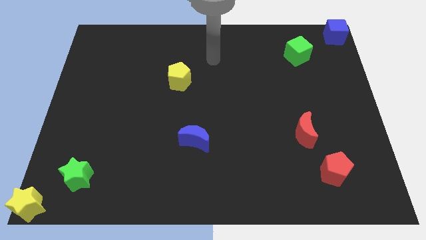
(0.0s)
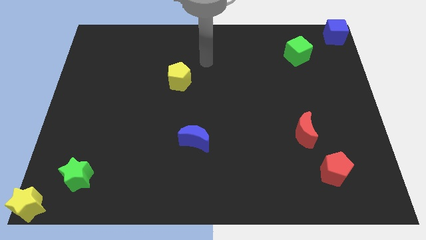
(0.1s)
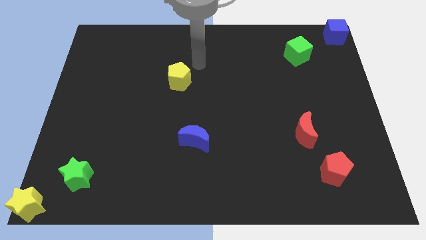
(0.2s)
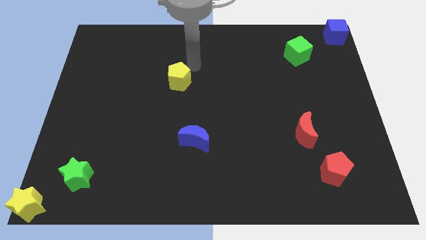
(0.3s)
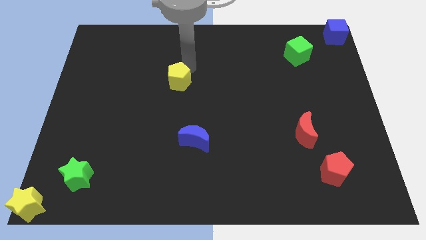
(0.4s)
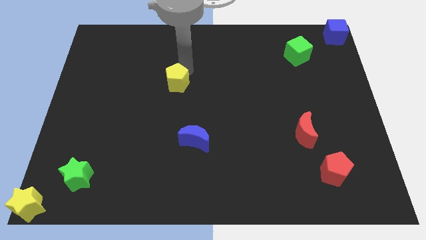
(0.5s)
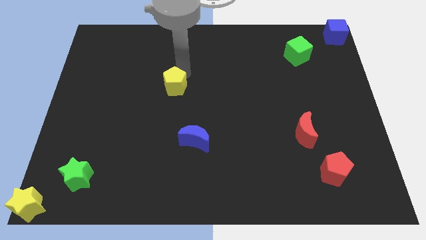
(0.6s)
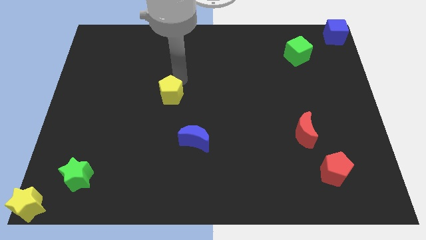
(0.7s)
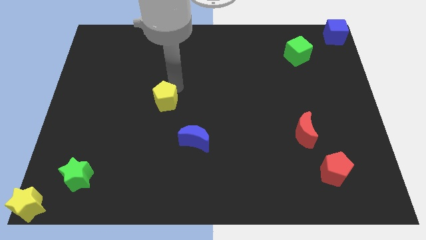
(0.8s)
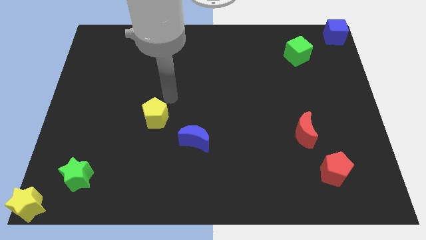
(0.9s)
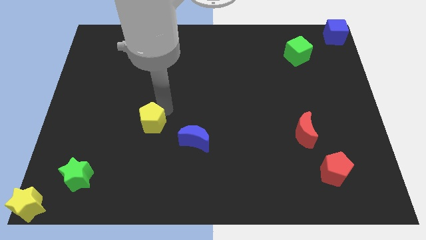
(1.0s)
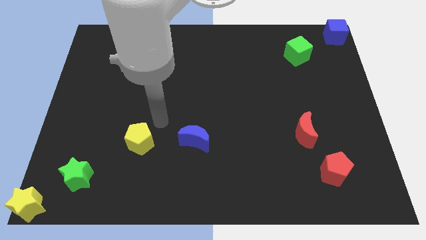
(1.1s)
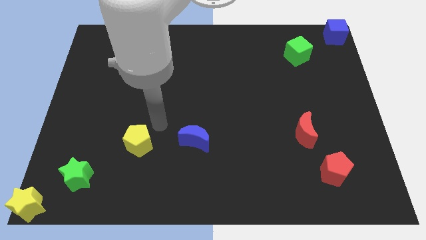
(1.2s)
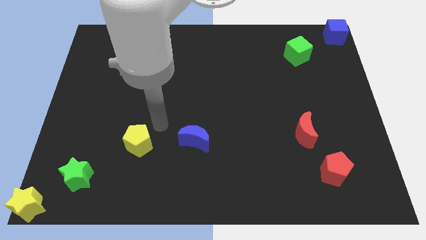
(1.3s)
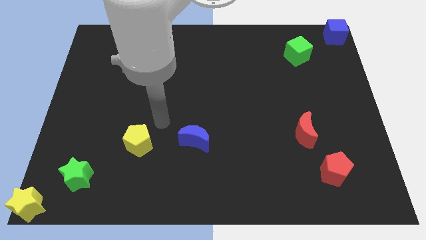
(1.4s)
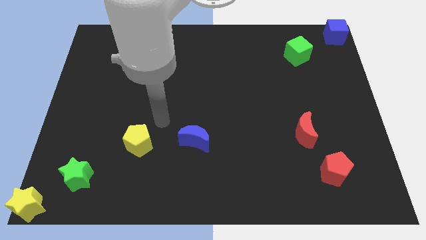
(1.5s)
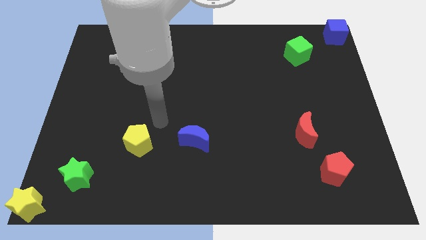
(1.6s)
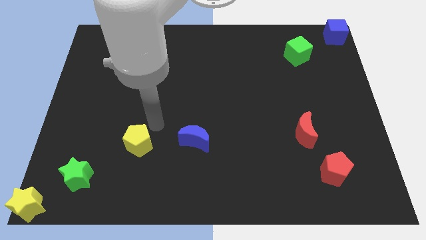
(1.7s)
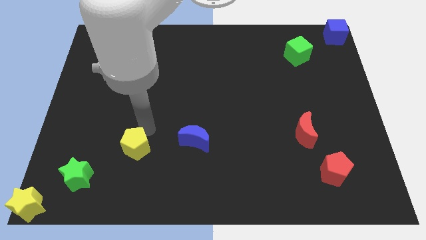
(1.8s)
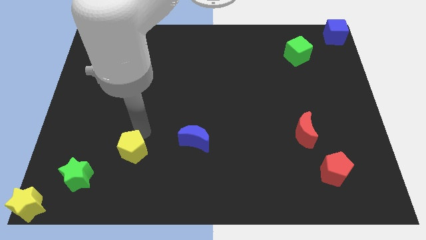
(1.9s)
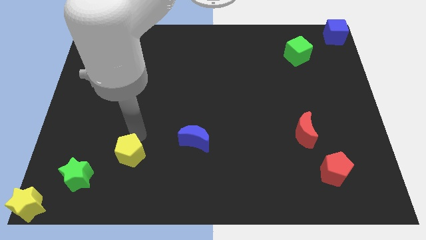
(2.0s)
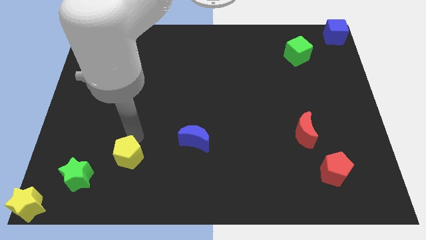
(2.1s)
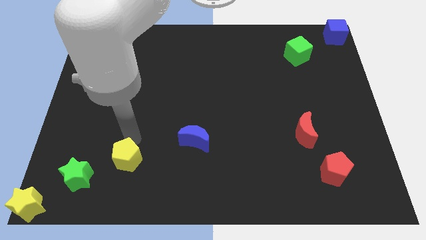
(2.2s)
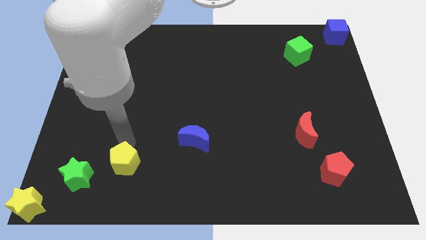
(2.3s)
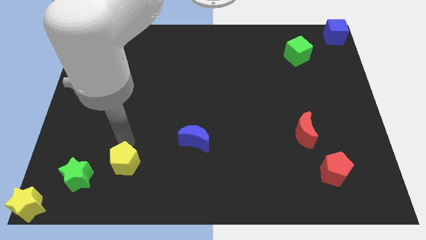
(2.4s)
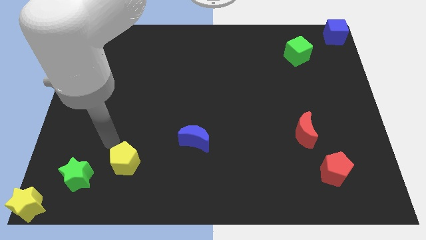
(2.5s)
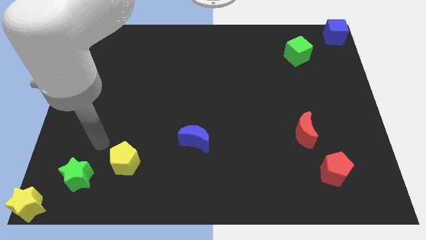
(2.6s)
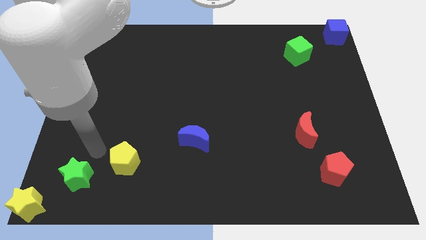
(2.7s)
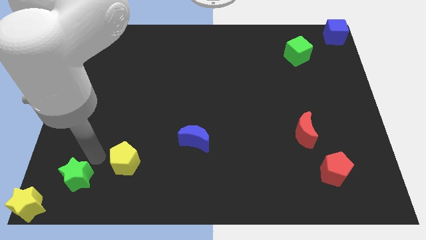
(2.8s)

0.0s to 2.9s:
push the yellow pentagon to the bottom of the board

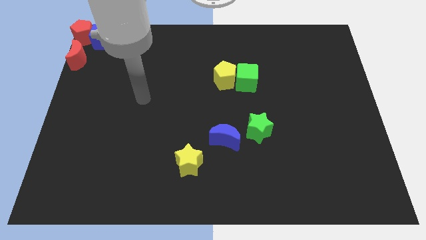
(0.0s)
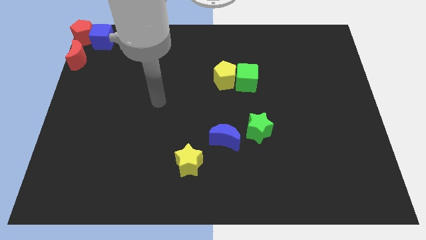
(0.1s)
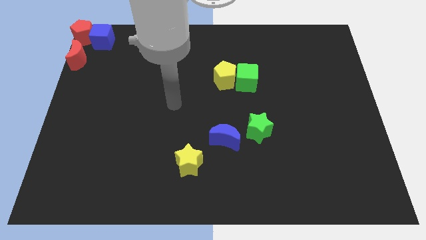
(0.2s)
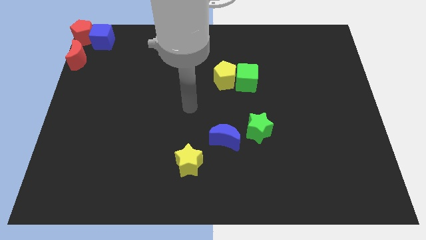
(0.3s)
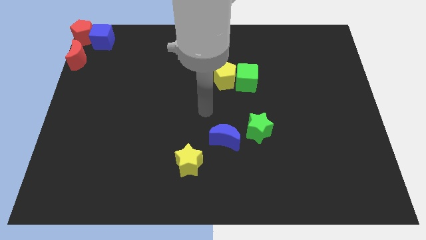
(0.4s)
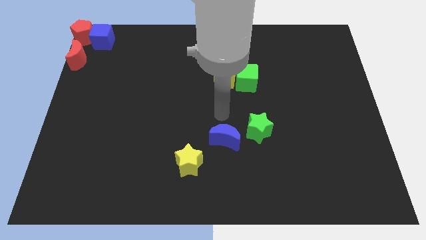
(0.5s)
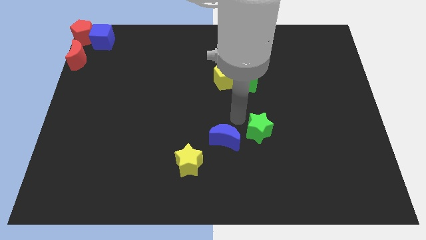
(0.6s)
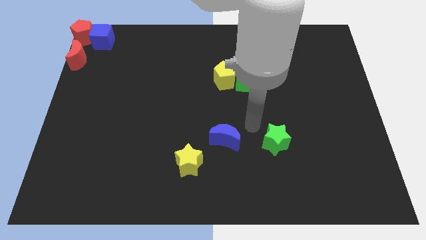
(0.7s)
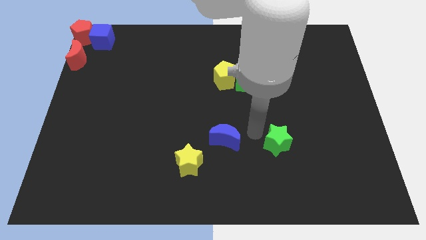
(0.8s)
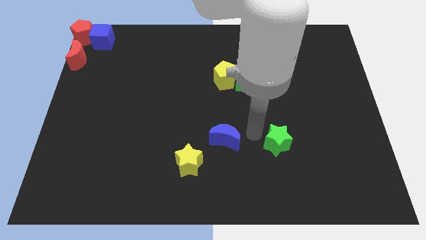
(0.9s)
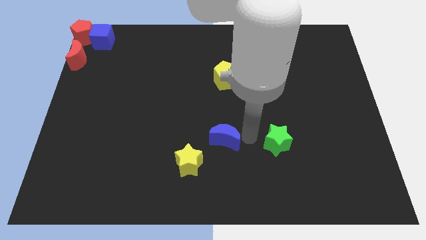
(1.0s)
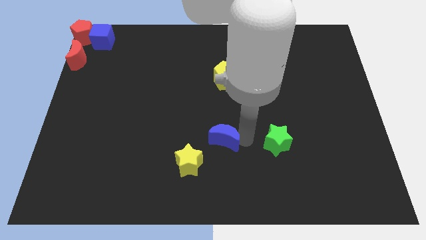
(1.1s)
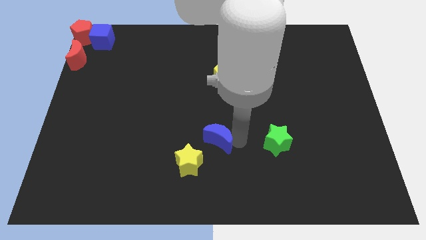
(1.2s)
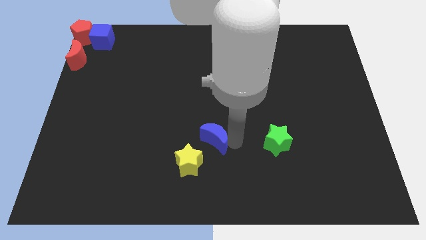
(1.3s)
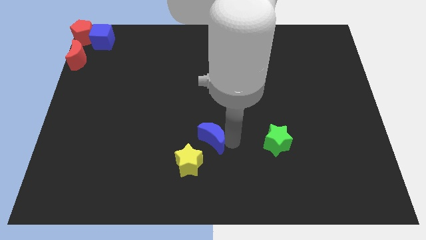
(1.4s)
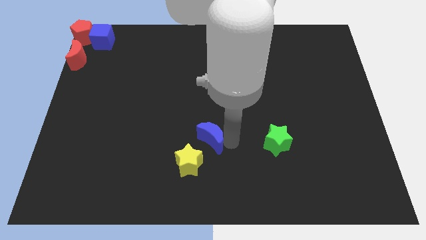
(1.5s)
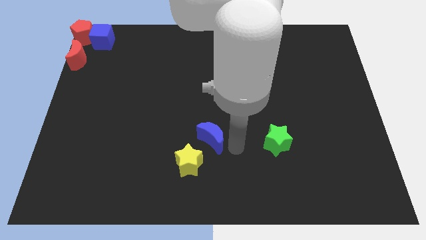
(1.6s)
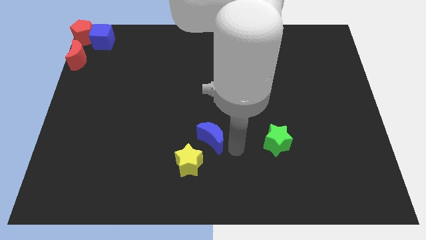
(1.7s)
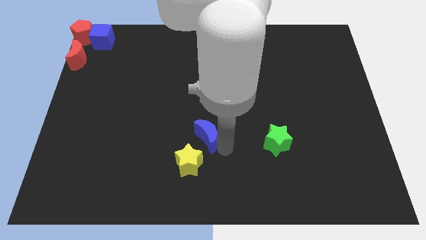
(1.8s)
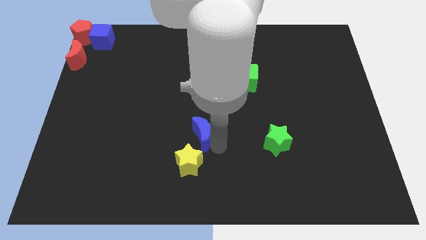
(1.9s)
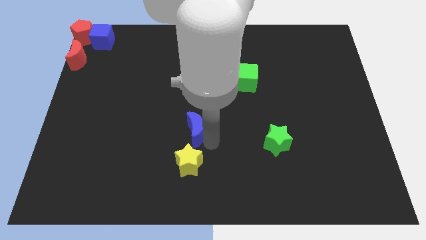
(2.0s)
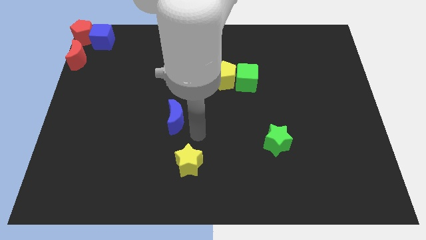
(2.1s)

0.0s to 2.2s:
move the blue moon to the left of the green cube

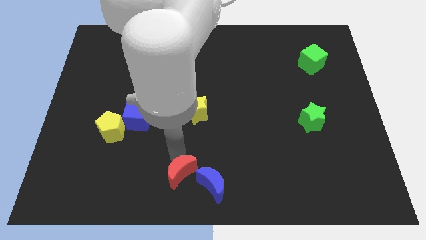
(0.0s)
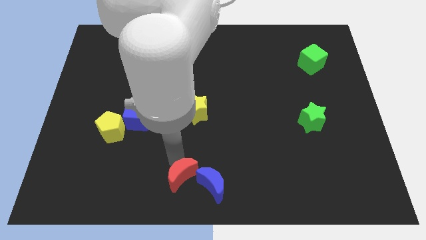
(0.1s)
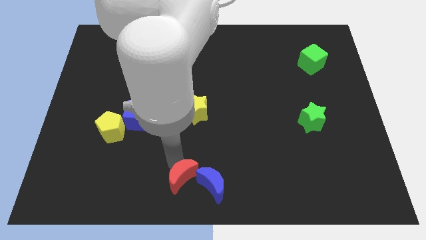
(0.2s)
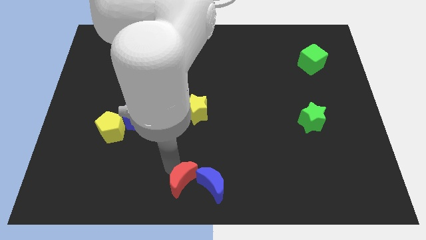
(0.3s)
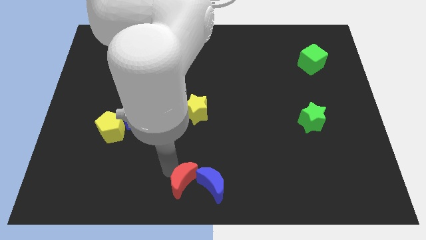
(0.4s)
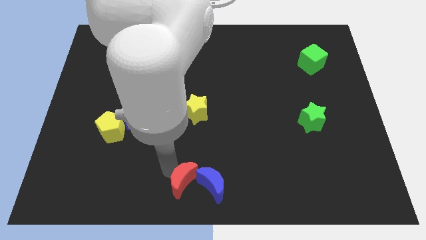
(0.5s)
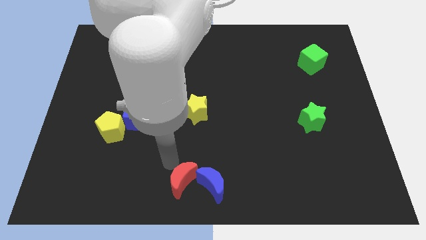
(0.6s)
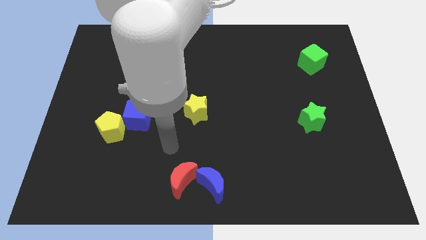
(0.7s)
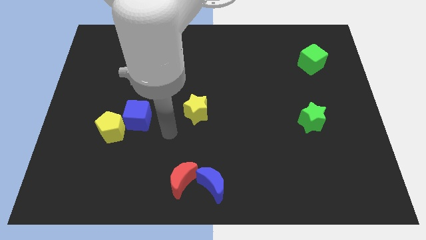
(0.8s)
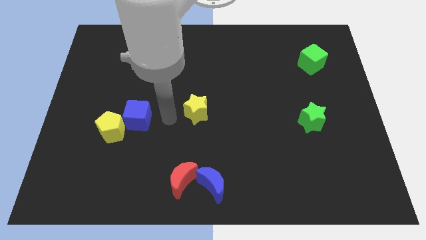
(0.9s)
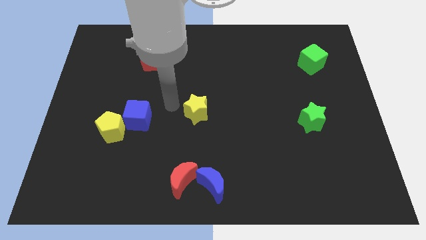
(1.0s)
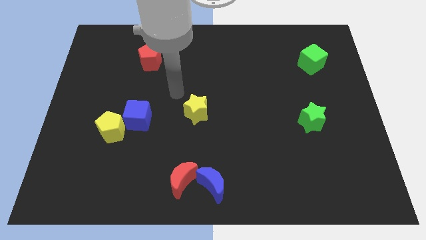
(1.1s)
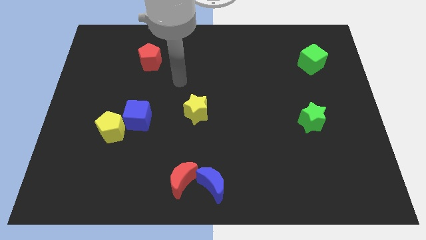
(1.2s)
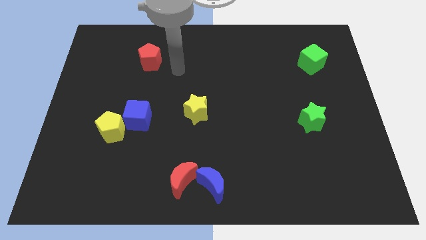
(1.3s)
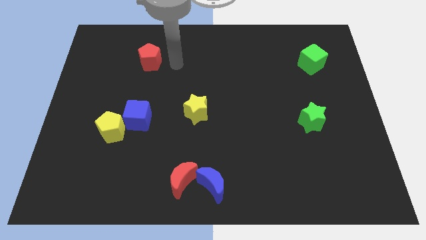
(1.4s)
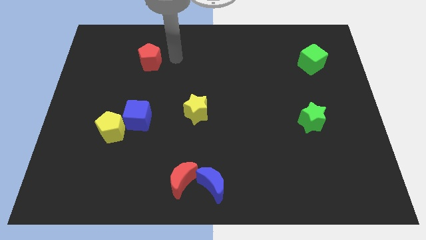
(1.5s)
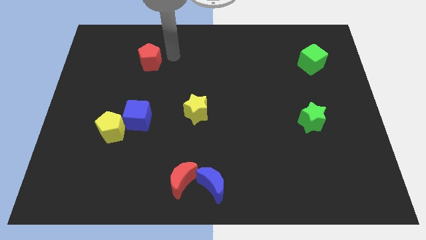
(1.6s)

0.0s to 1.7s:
move the arm to the right of the red pentagon

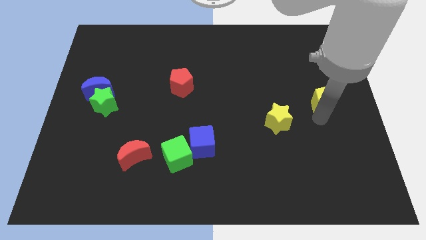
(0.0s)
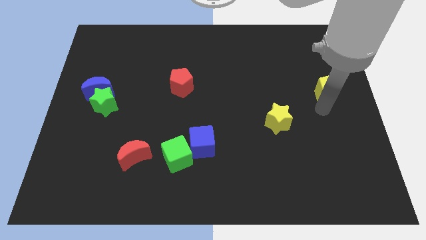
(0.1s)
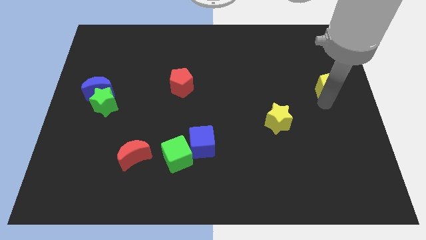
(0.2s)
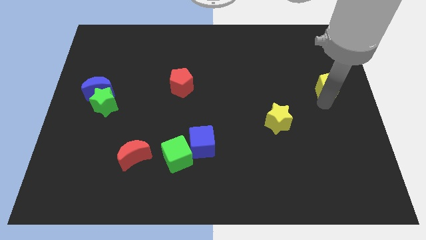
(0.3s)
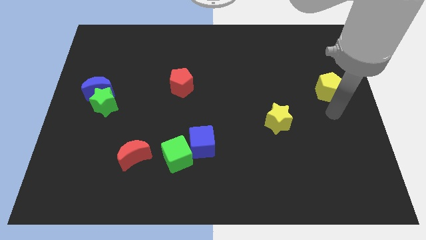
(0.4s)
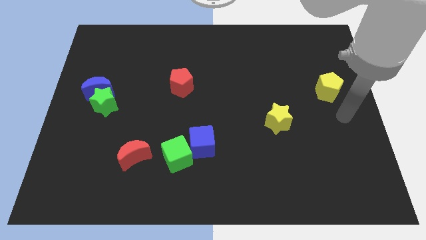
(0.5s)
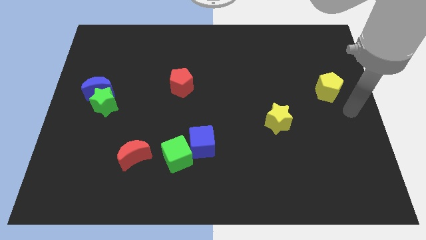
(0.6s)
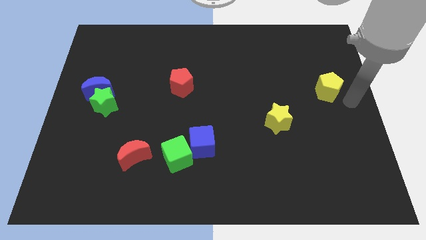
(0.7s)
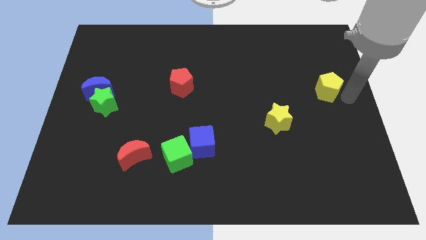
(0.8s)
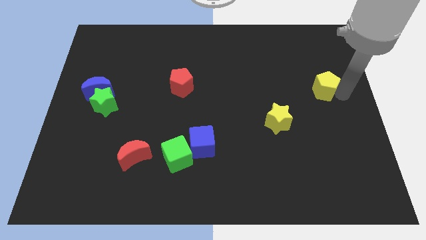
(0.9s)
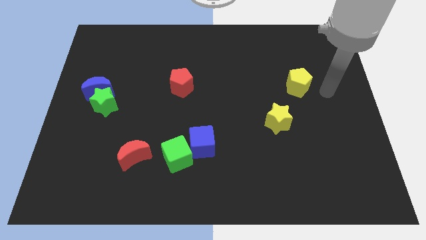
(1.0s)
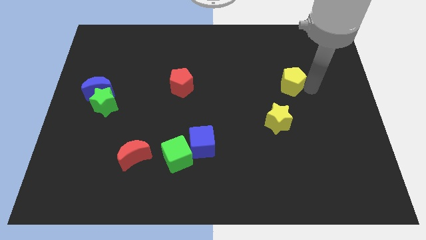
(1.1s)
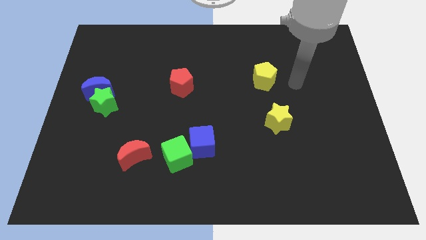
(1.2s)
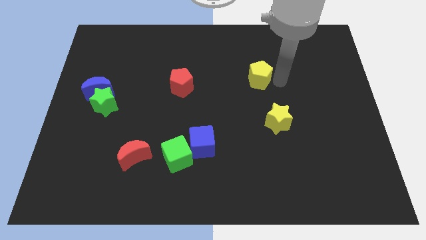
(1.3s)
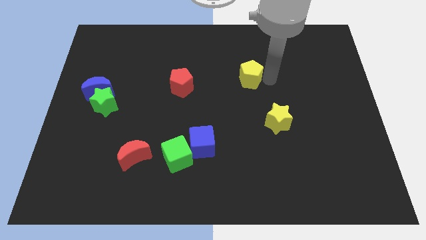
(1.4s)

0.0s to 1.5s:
move the yellow pentagon to the top left of the yellow star

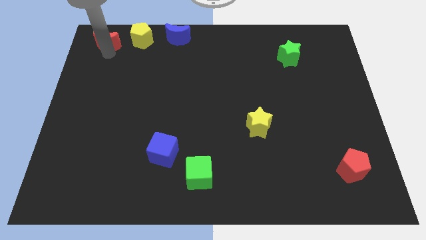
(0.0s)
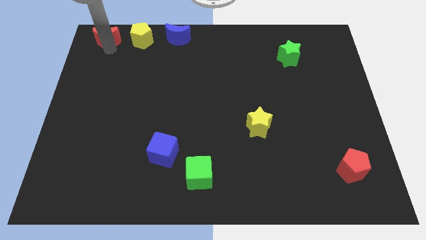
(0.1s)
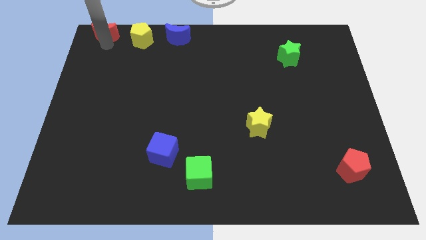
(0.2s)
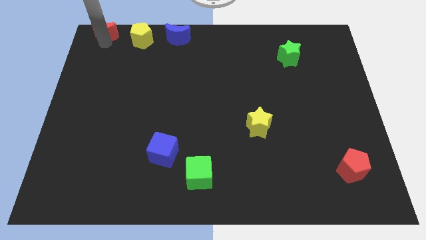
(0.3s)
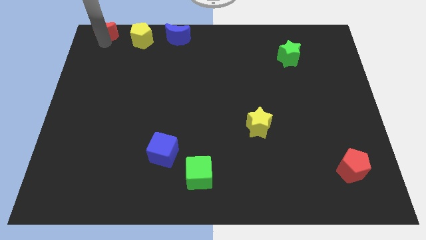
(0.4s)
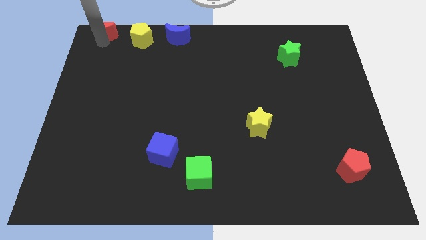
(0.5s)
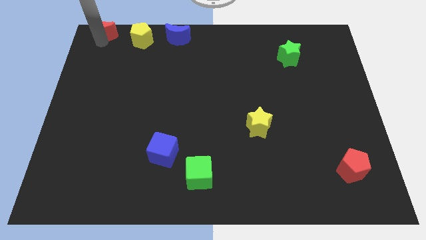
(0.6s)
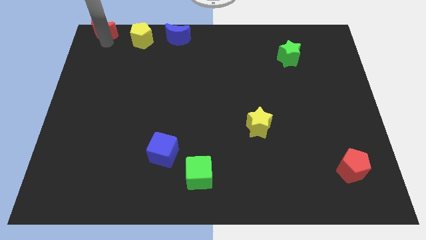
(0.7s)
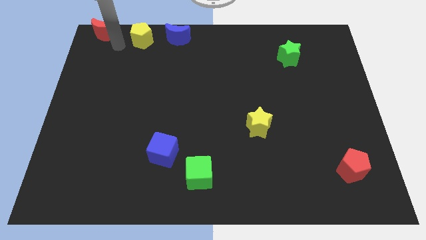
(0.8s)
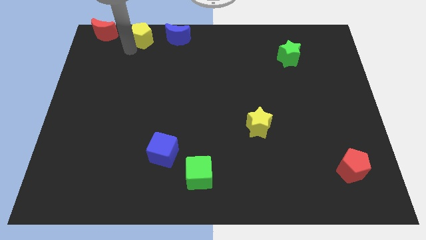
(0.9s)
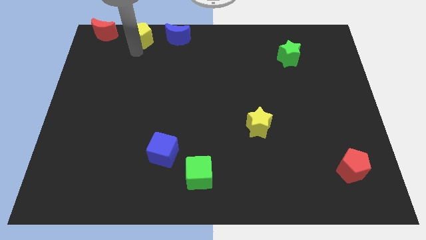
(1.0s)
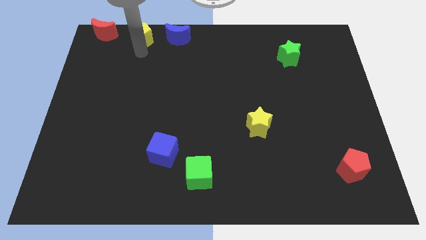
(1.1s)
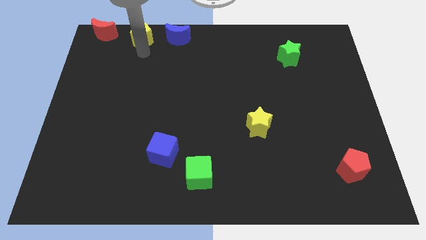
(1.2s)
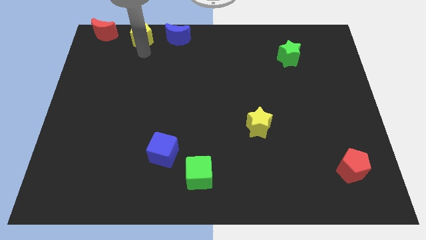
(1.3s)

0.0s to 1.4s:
place the red crescent horizontally towards yellow pentgaon
